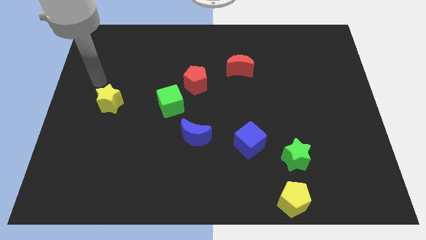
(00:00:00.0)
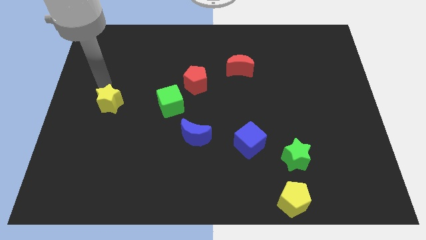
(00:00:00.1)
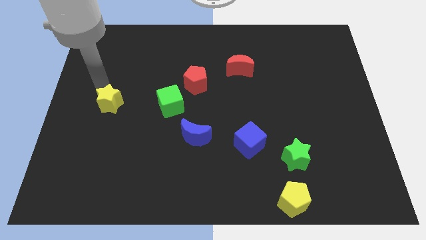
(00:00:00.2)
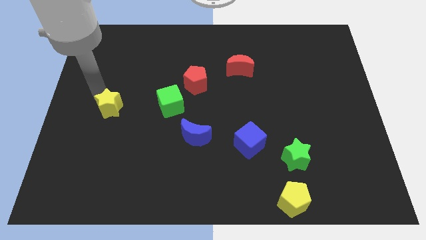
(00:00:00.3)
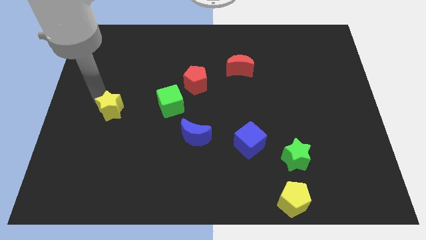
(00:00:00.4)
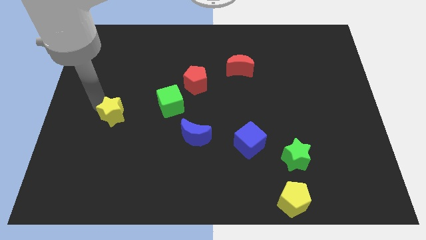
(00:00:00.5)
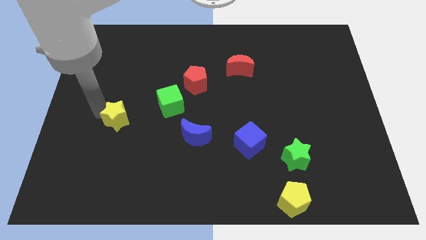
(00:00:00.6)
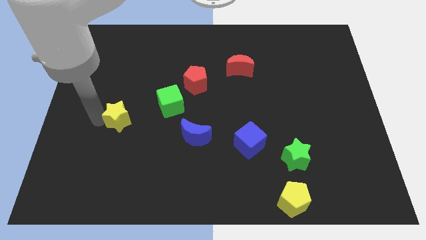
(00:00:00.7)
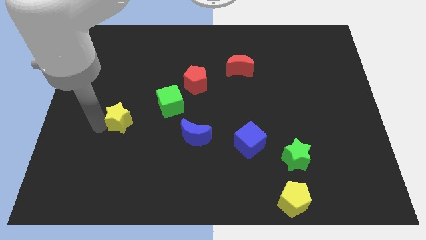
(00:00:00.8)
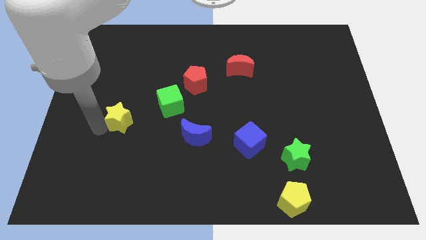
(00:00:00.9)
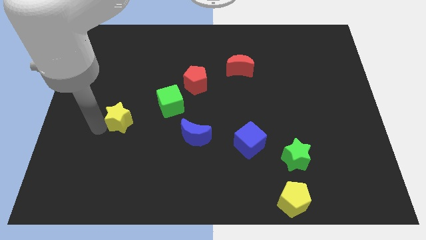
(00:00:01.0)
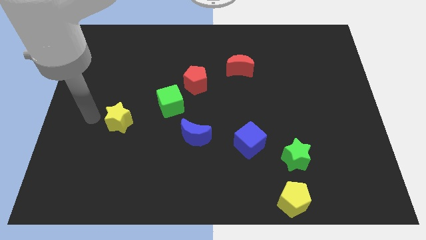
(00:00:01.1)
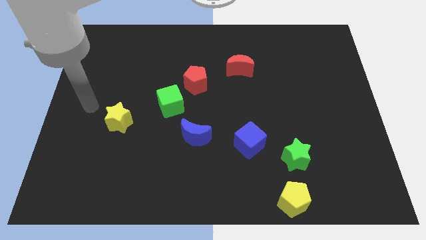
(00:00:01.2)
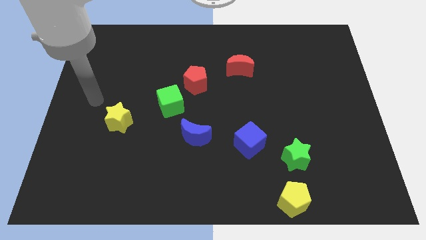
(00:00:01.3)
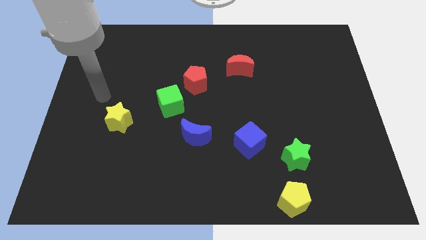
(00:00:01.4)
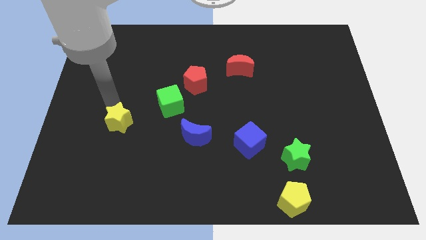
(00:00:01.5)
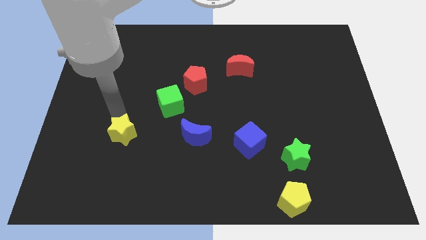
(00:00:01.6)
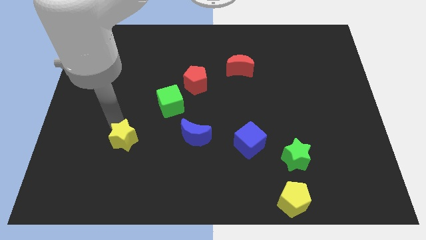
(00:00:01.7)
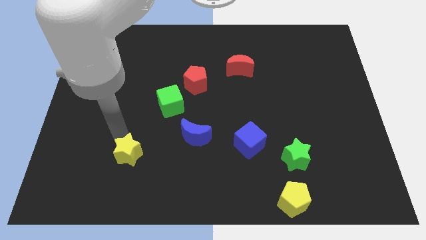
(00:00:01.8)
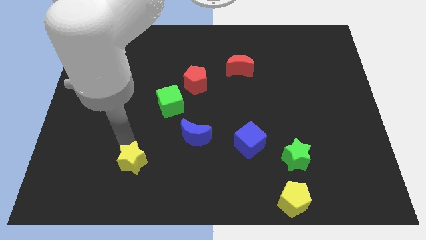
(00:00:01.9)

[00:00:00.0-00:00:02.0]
place the yellow star parallel to blue cube

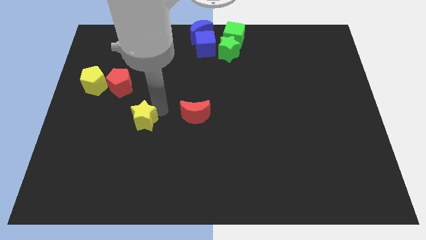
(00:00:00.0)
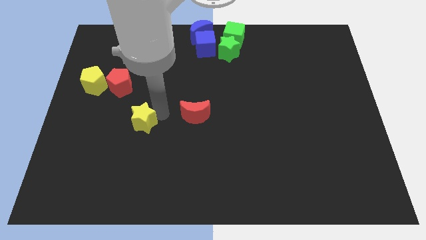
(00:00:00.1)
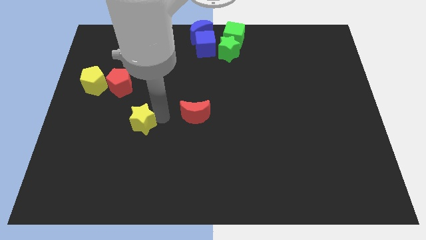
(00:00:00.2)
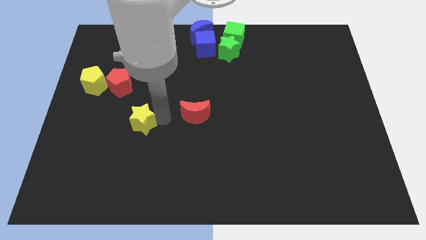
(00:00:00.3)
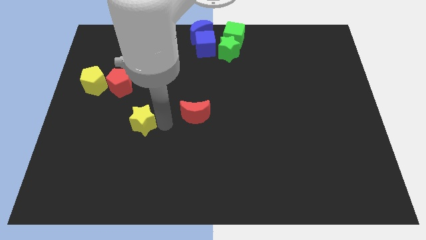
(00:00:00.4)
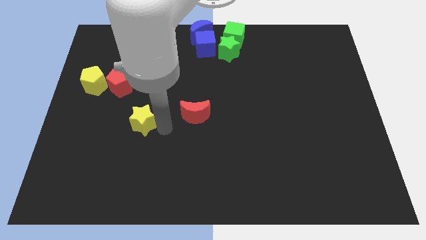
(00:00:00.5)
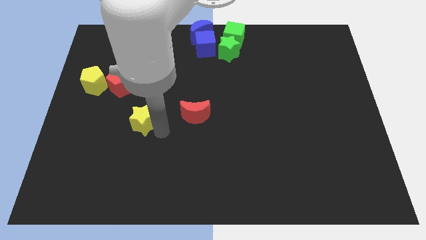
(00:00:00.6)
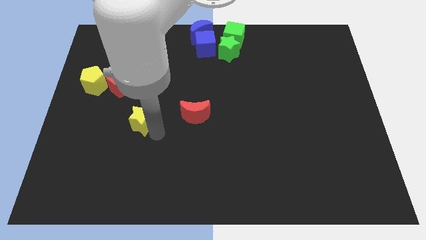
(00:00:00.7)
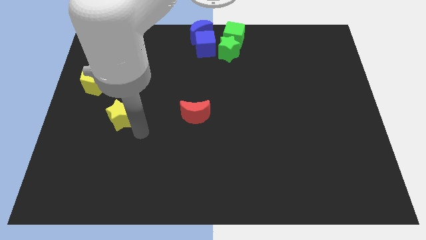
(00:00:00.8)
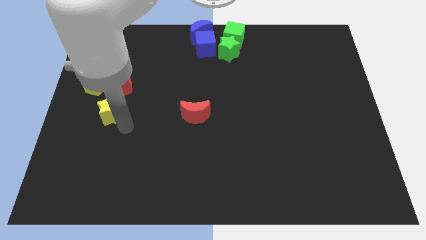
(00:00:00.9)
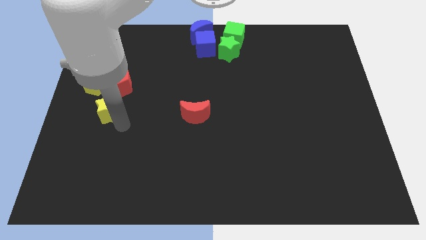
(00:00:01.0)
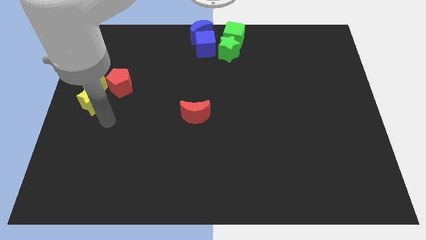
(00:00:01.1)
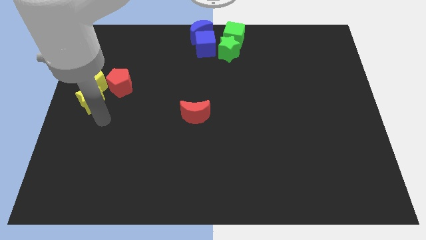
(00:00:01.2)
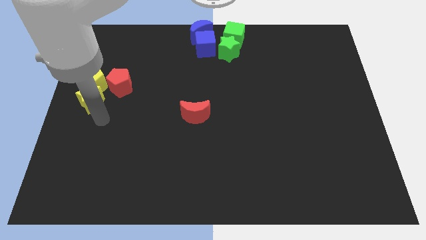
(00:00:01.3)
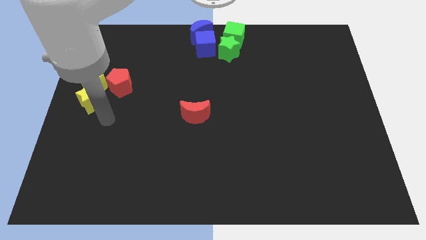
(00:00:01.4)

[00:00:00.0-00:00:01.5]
put the yellow star below the yellow pentagon

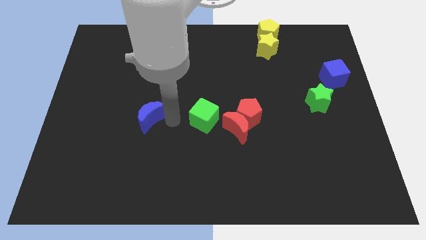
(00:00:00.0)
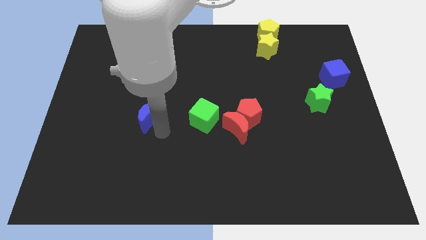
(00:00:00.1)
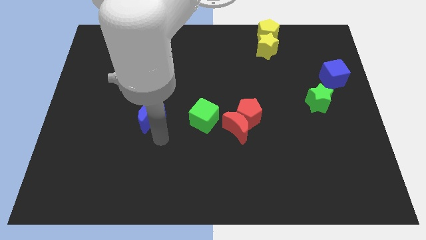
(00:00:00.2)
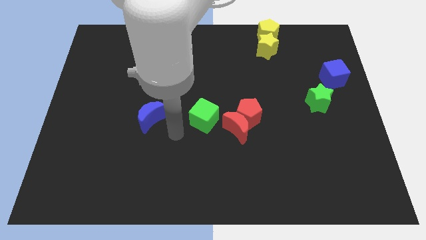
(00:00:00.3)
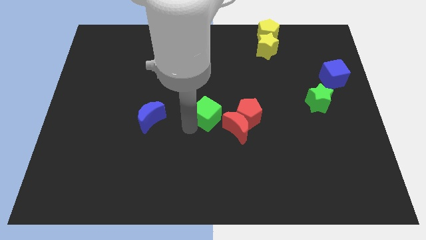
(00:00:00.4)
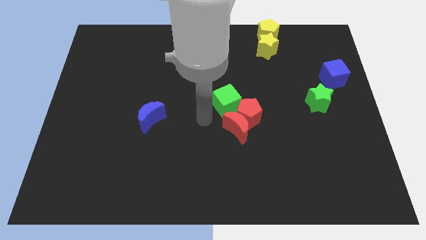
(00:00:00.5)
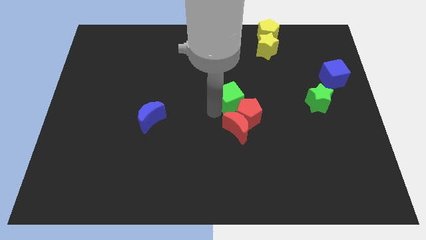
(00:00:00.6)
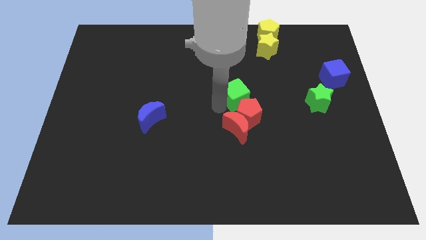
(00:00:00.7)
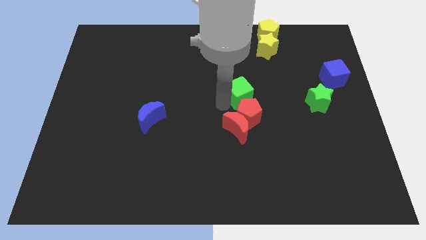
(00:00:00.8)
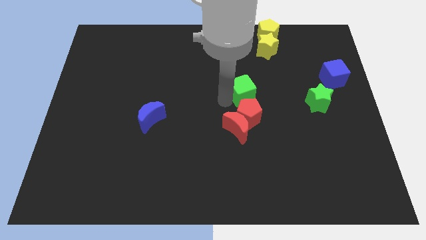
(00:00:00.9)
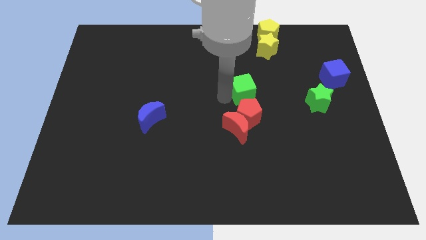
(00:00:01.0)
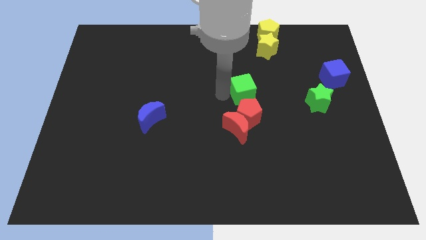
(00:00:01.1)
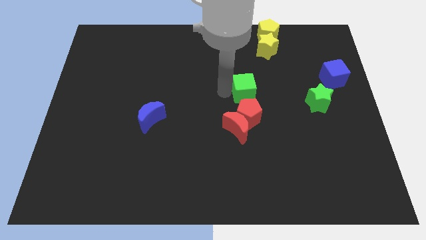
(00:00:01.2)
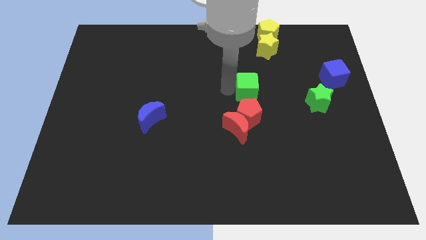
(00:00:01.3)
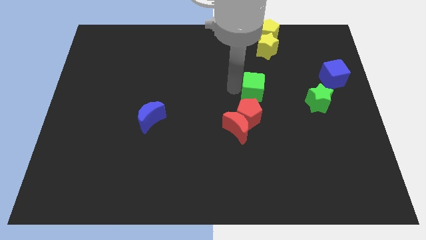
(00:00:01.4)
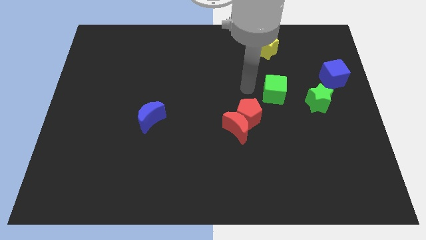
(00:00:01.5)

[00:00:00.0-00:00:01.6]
place the green cube above the red blocks

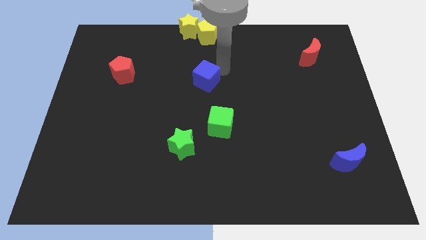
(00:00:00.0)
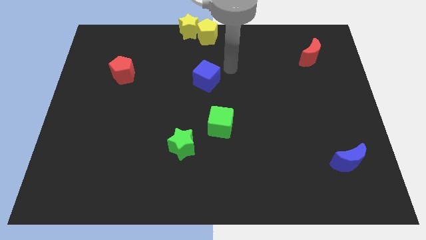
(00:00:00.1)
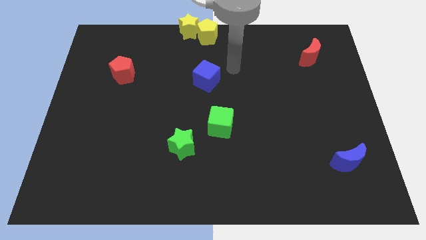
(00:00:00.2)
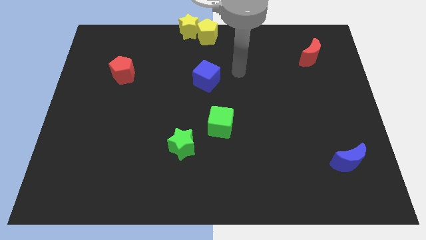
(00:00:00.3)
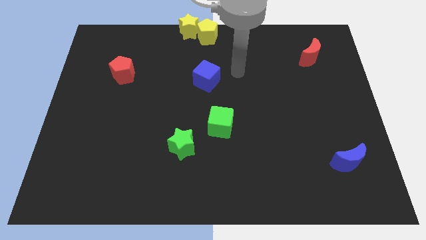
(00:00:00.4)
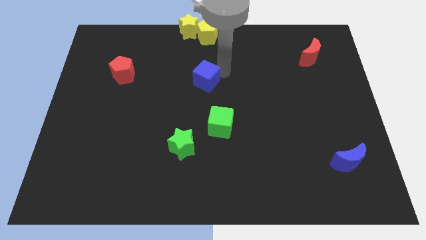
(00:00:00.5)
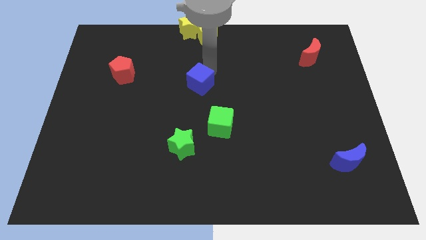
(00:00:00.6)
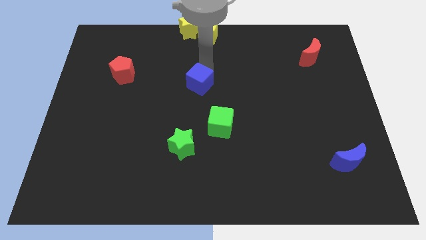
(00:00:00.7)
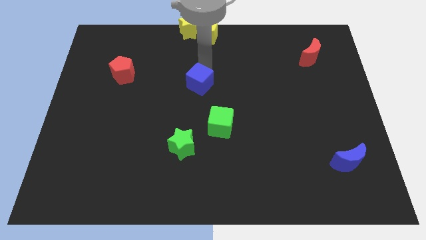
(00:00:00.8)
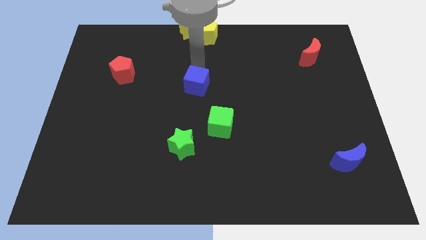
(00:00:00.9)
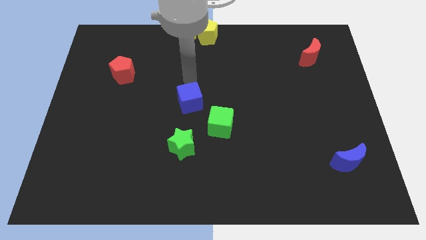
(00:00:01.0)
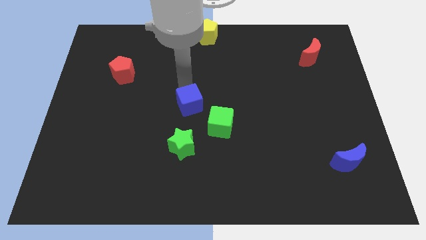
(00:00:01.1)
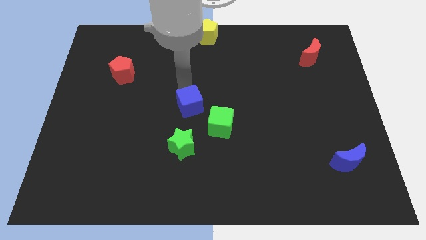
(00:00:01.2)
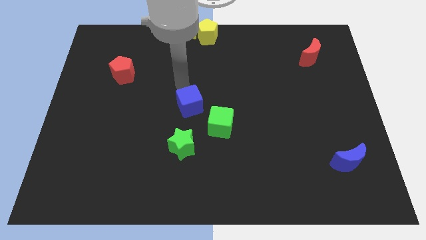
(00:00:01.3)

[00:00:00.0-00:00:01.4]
place blue cube to the top of the green star

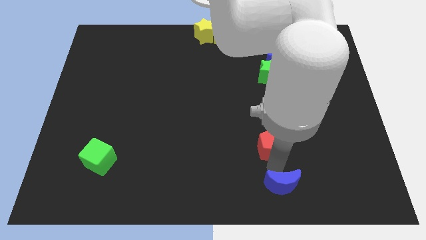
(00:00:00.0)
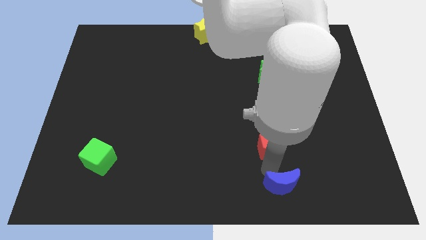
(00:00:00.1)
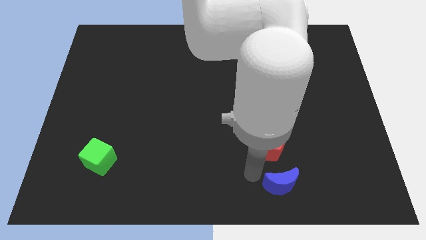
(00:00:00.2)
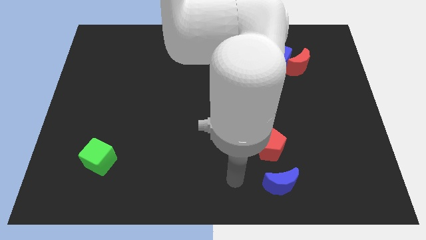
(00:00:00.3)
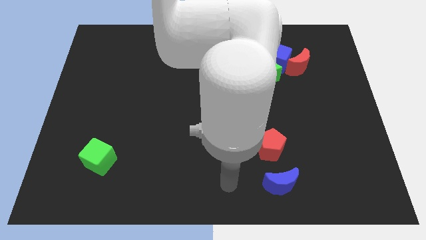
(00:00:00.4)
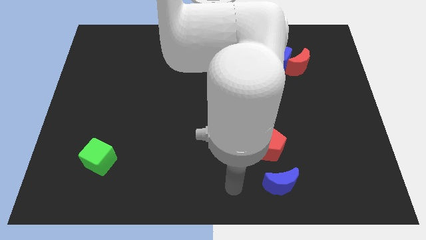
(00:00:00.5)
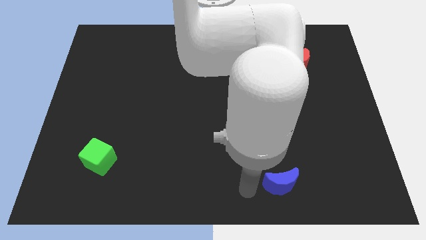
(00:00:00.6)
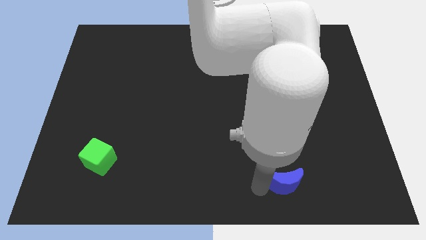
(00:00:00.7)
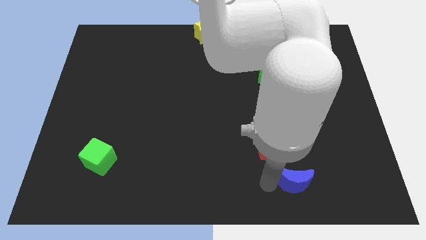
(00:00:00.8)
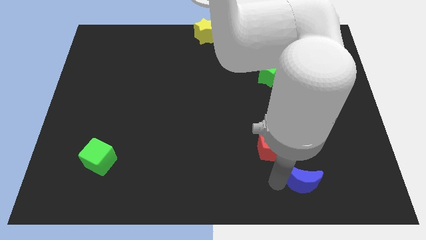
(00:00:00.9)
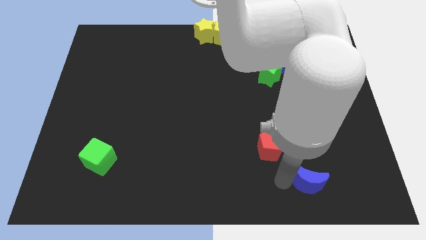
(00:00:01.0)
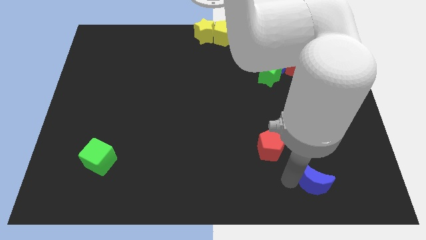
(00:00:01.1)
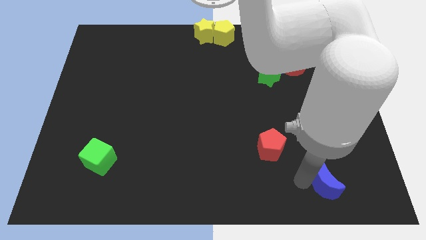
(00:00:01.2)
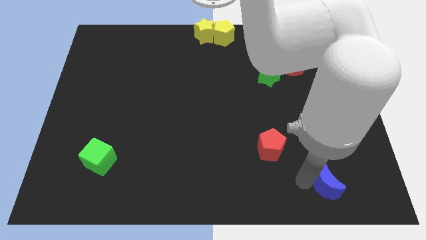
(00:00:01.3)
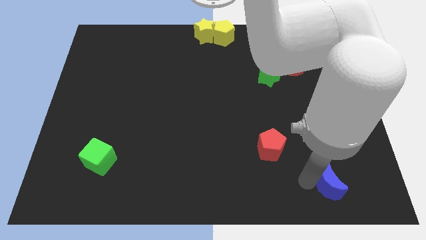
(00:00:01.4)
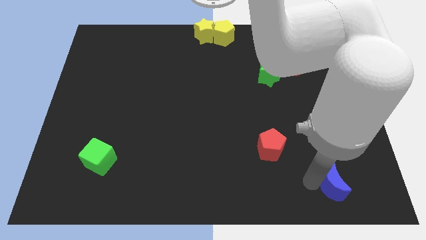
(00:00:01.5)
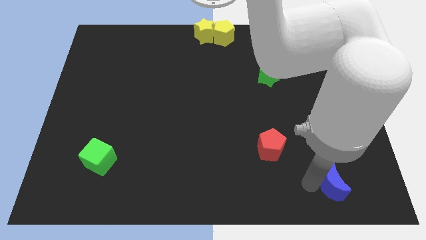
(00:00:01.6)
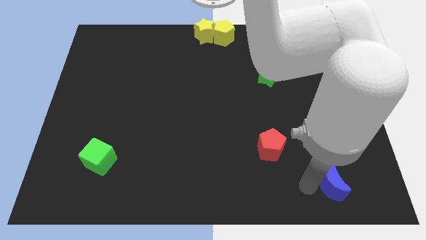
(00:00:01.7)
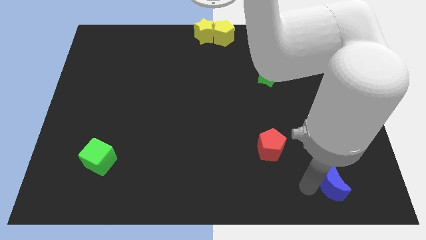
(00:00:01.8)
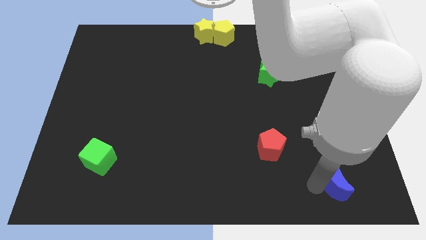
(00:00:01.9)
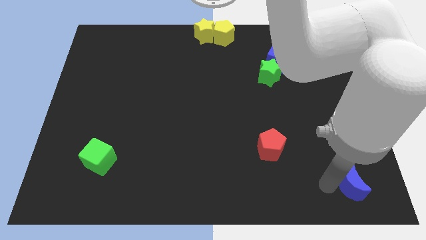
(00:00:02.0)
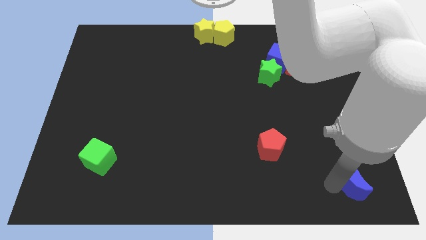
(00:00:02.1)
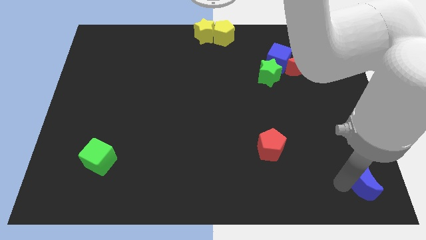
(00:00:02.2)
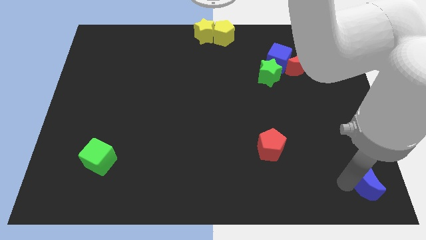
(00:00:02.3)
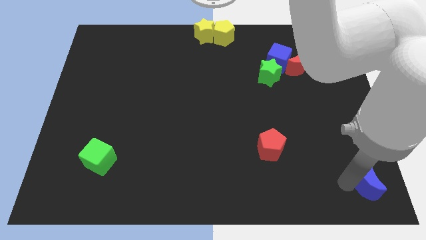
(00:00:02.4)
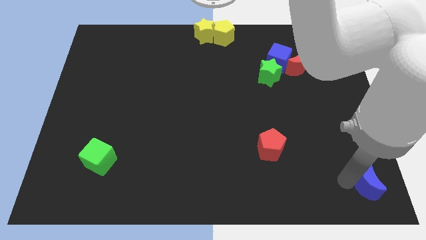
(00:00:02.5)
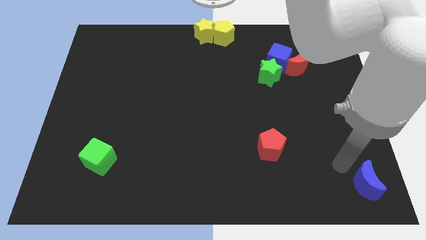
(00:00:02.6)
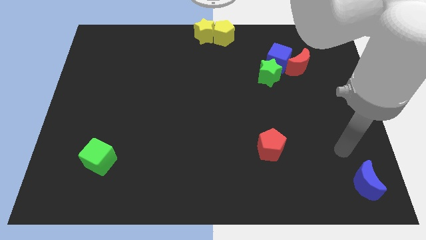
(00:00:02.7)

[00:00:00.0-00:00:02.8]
move blue crescent at bottom right corner
